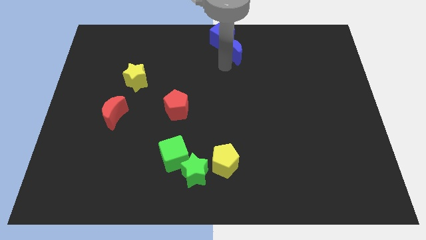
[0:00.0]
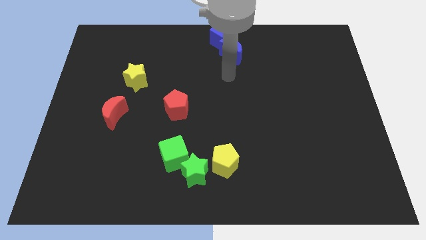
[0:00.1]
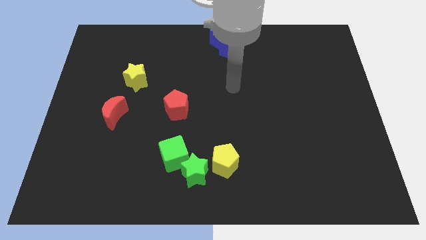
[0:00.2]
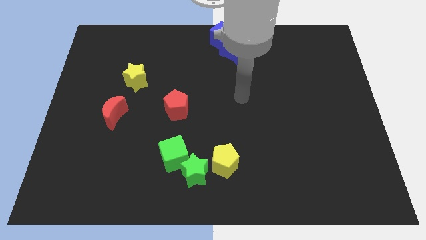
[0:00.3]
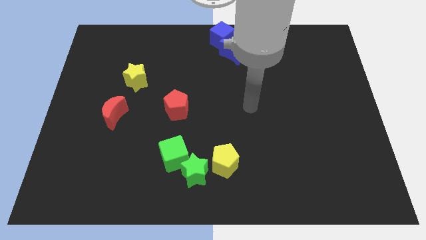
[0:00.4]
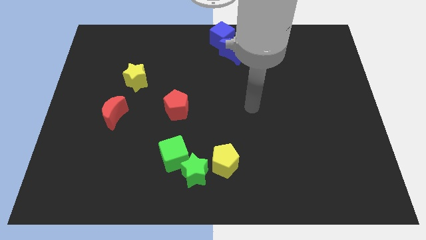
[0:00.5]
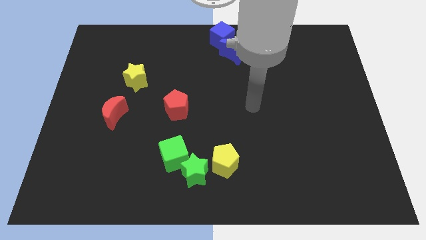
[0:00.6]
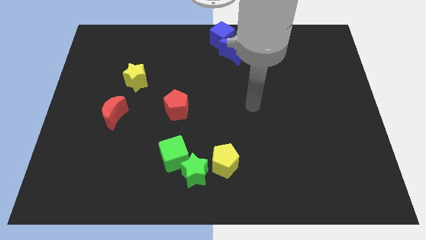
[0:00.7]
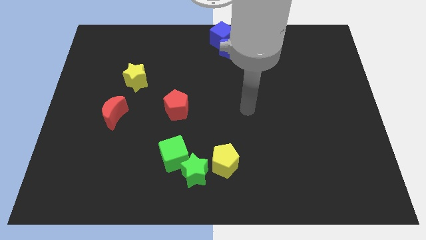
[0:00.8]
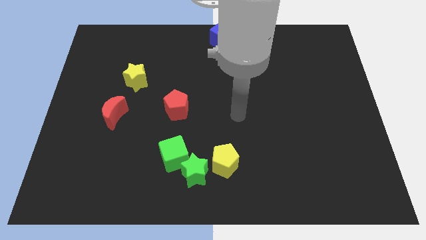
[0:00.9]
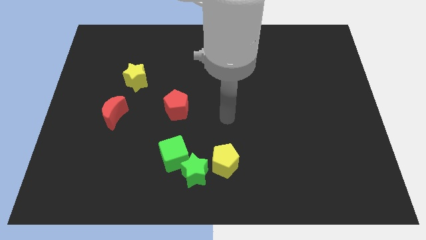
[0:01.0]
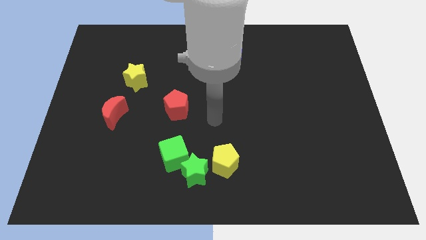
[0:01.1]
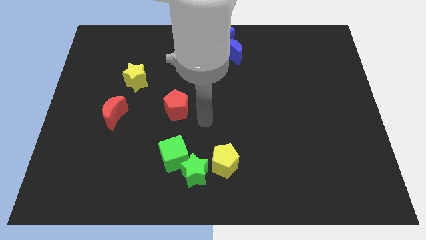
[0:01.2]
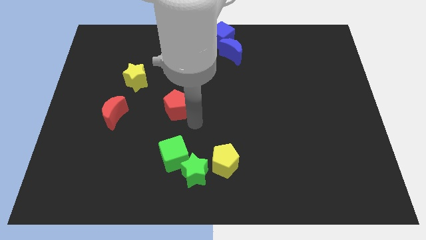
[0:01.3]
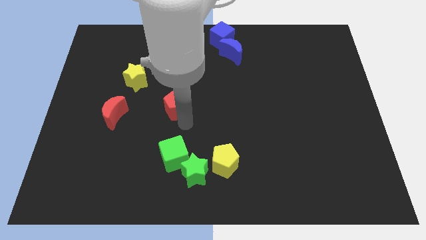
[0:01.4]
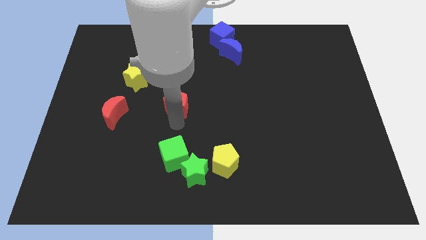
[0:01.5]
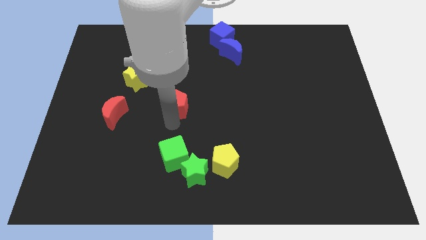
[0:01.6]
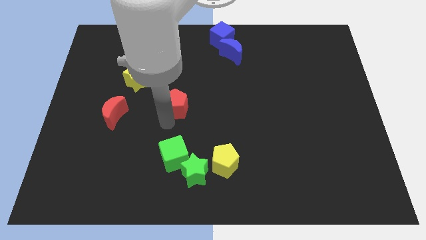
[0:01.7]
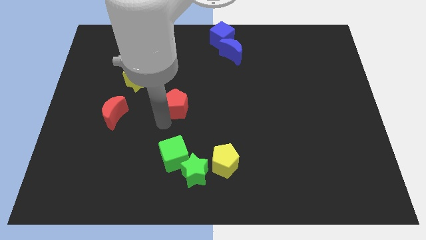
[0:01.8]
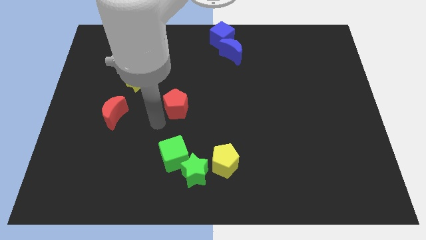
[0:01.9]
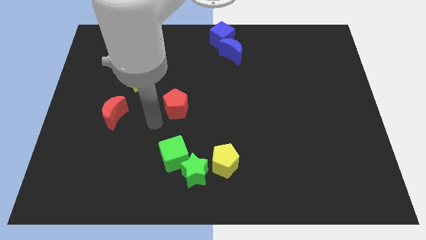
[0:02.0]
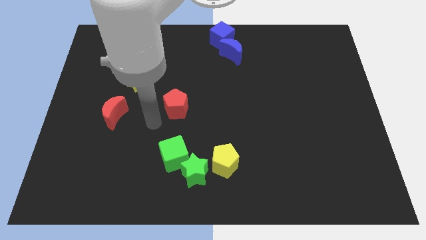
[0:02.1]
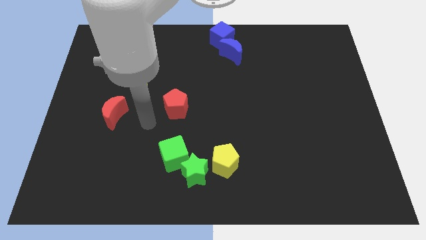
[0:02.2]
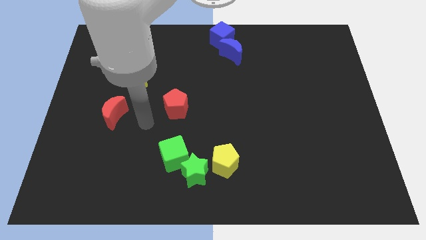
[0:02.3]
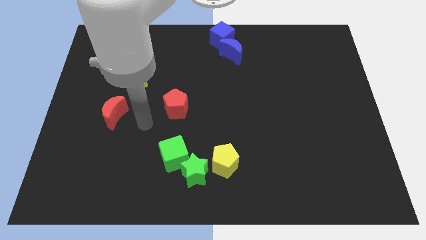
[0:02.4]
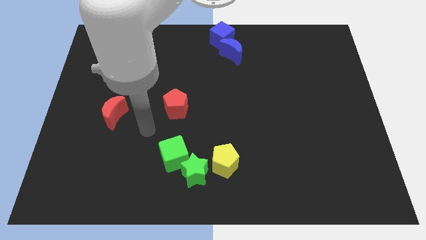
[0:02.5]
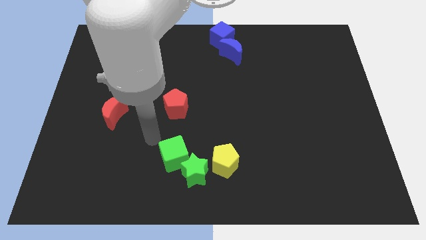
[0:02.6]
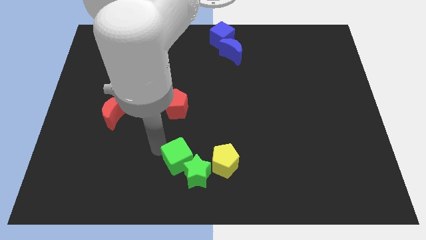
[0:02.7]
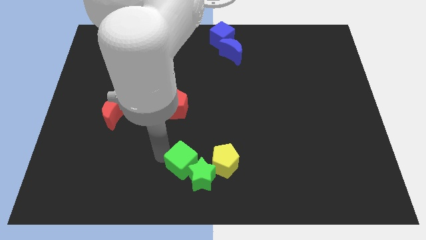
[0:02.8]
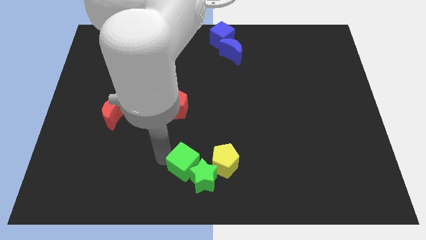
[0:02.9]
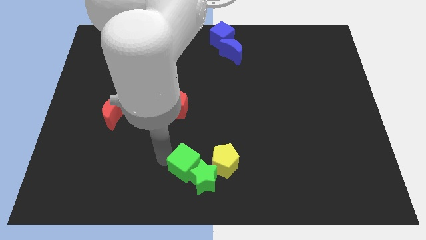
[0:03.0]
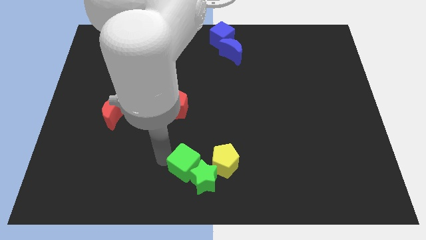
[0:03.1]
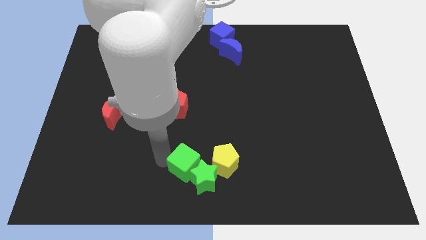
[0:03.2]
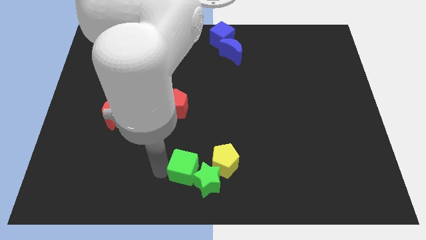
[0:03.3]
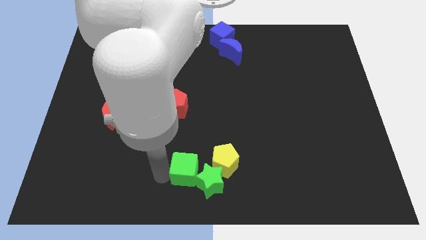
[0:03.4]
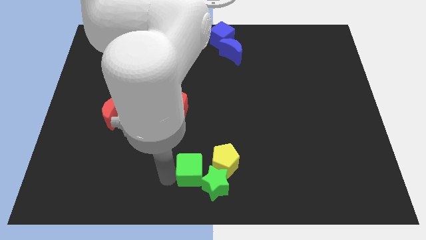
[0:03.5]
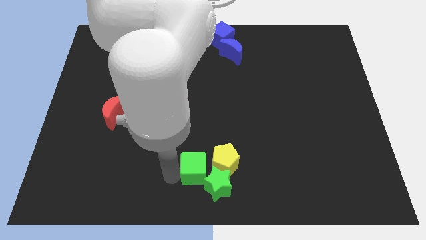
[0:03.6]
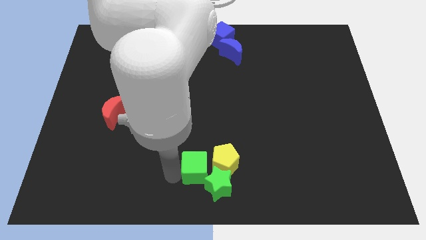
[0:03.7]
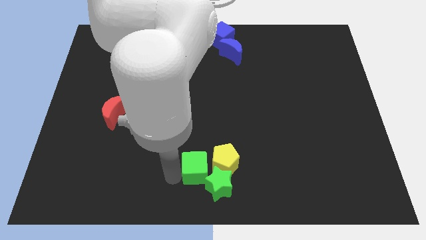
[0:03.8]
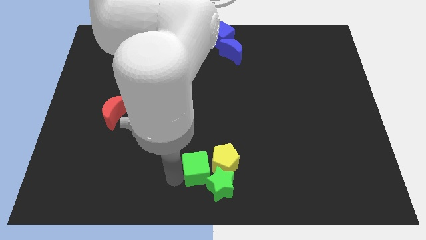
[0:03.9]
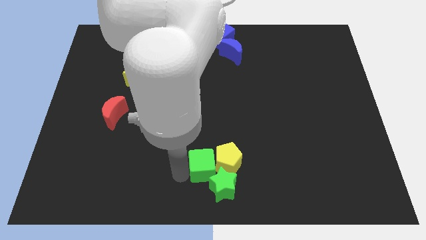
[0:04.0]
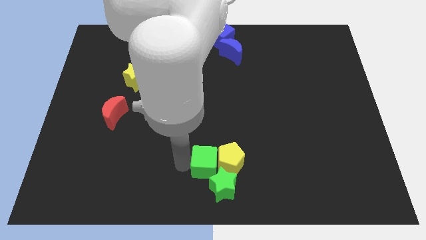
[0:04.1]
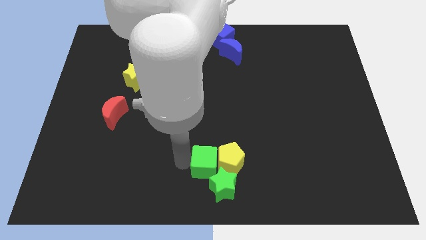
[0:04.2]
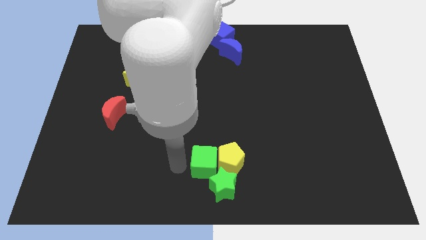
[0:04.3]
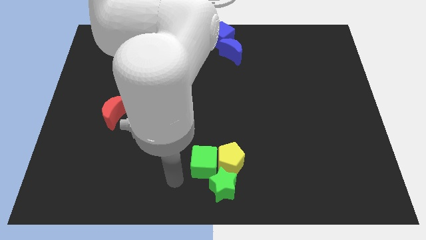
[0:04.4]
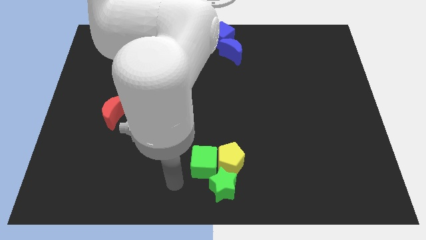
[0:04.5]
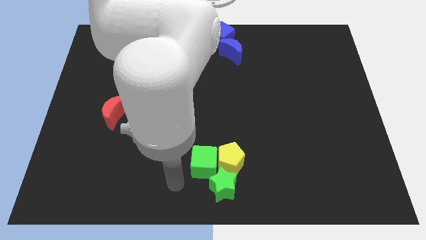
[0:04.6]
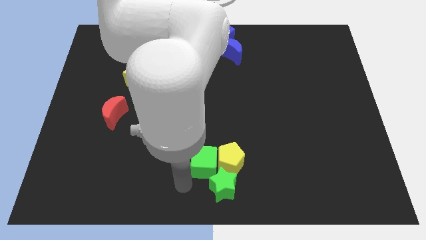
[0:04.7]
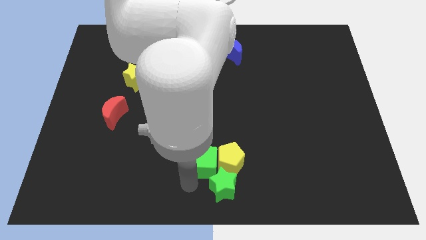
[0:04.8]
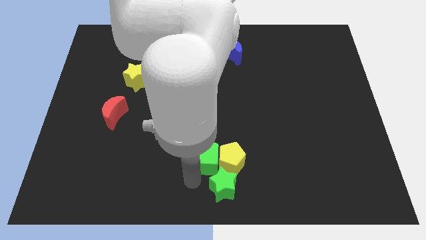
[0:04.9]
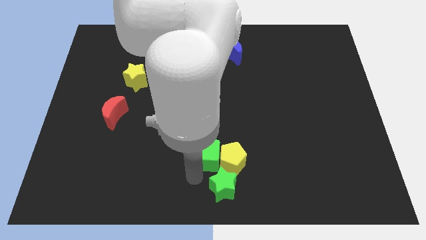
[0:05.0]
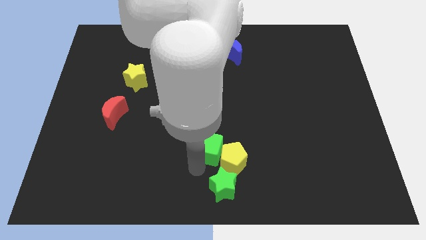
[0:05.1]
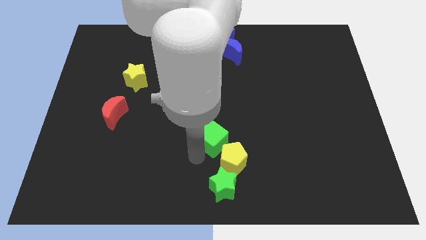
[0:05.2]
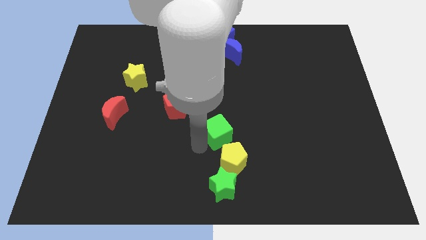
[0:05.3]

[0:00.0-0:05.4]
push the green cube to the top left of the yellow pentagon

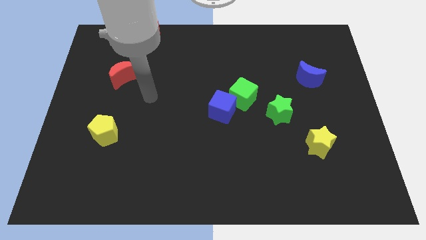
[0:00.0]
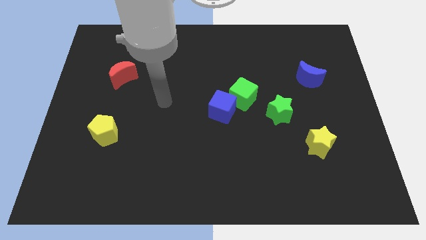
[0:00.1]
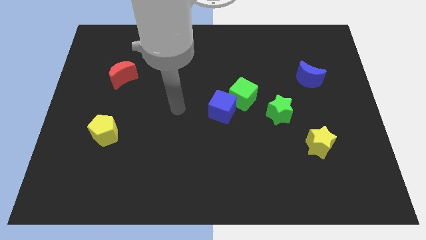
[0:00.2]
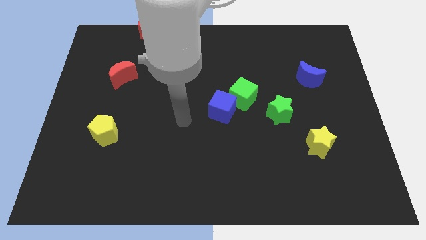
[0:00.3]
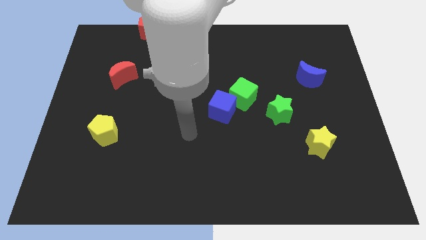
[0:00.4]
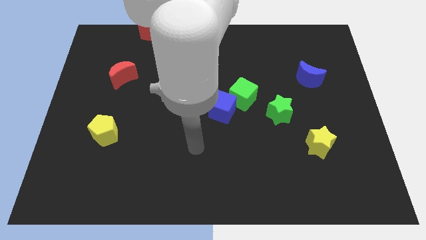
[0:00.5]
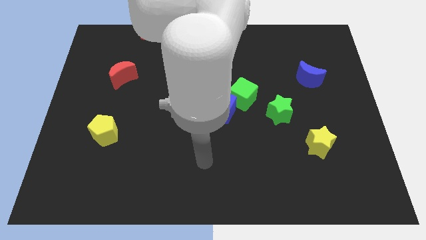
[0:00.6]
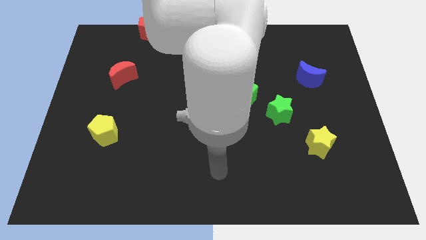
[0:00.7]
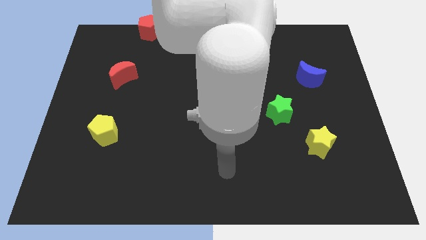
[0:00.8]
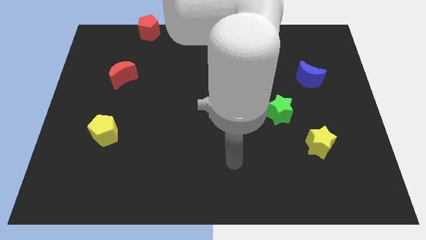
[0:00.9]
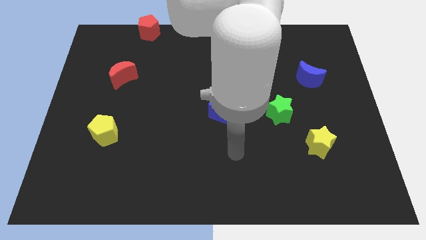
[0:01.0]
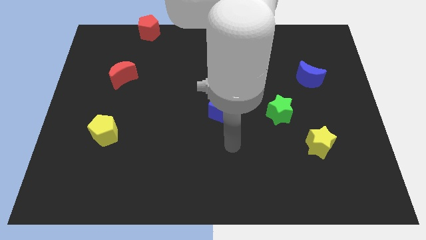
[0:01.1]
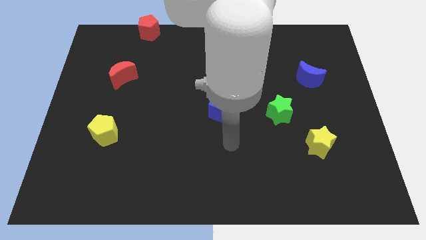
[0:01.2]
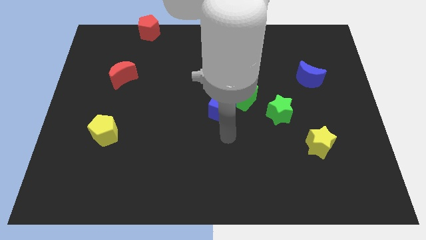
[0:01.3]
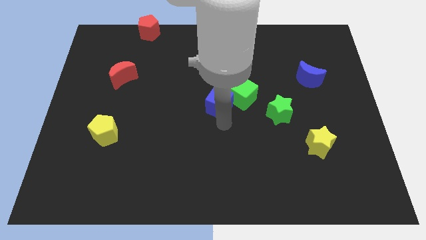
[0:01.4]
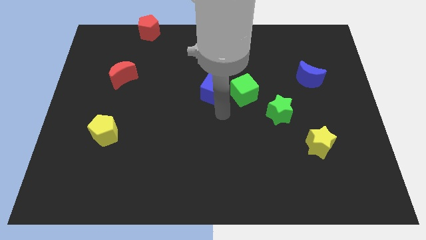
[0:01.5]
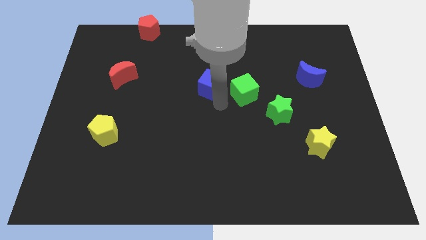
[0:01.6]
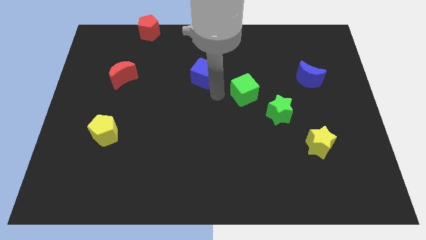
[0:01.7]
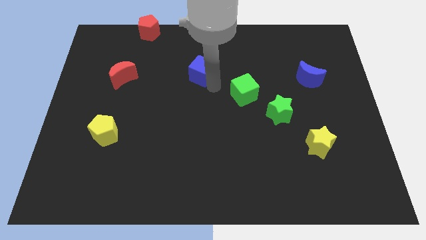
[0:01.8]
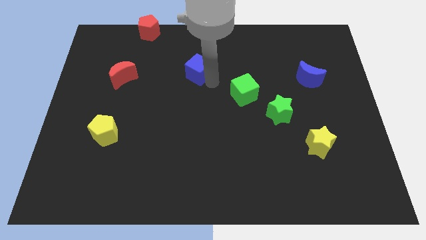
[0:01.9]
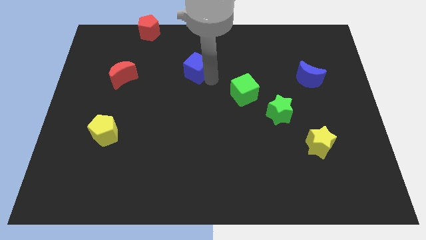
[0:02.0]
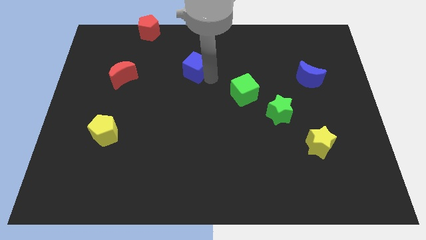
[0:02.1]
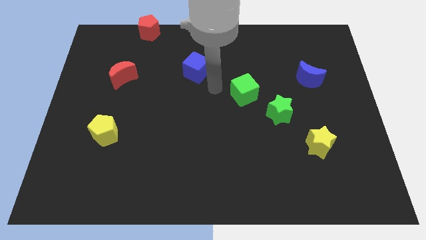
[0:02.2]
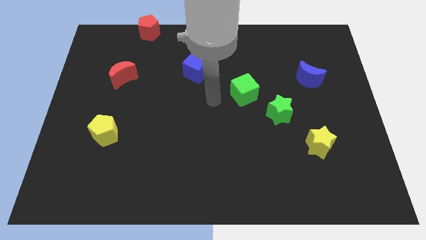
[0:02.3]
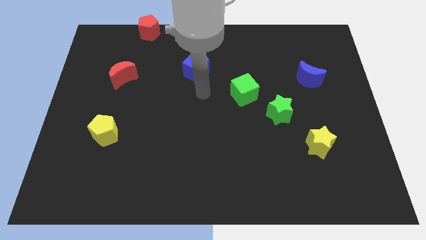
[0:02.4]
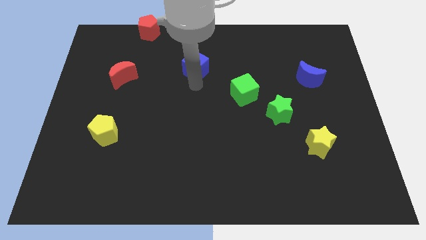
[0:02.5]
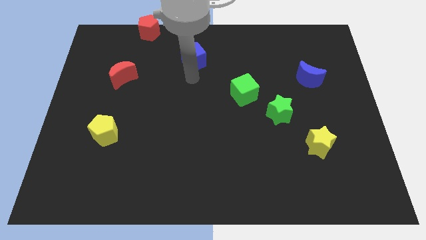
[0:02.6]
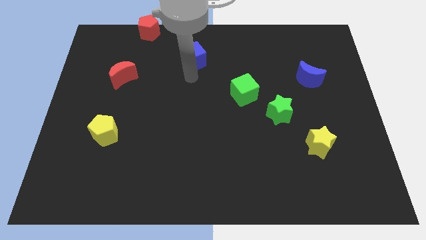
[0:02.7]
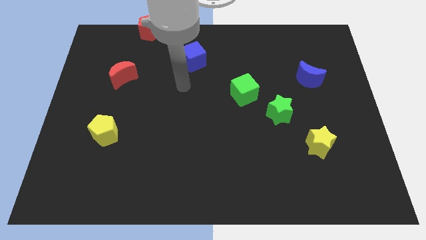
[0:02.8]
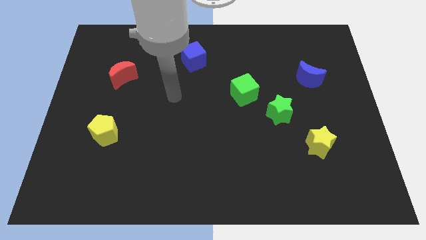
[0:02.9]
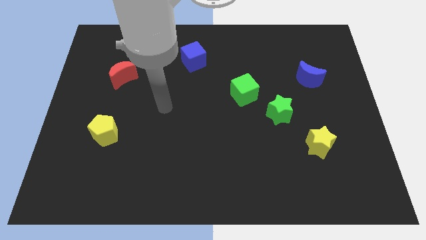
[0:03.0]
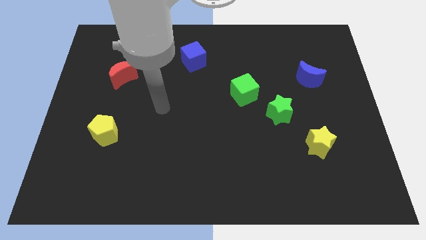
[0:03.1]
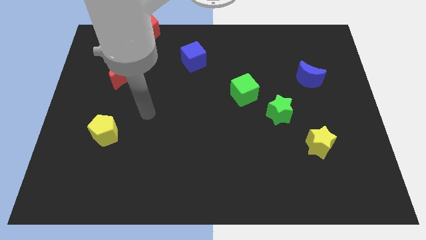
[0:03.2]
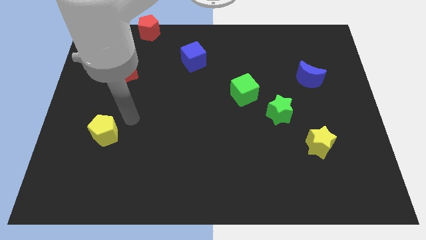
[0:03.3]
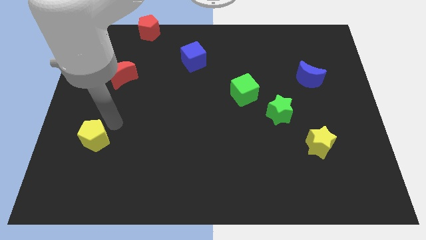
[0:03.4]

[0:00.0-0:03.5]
place the blue cube towards top center
